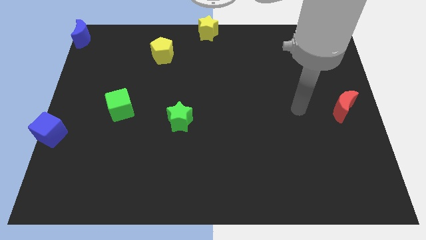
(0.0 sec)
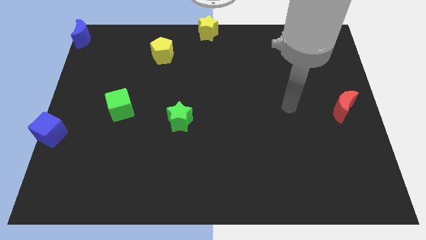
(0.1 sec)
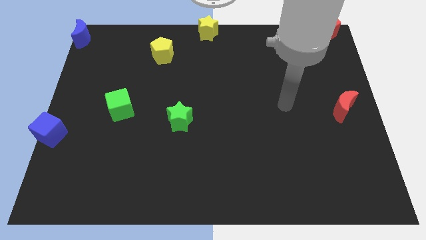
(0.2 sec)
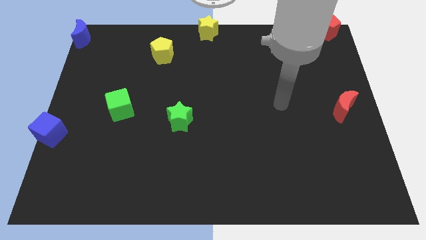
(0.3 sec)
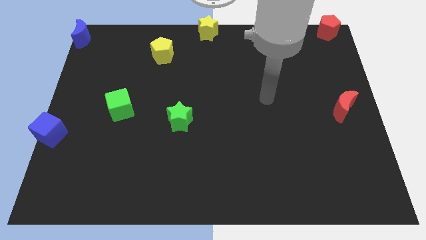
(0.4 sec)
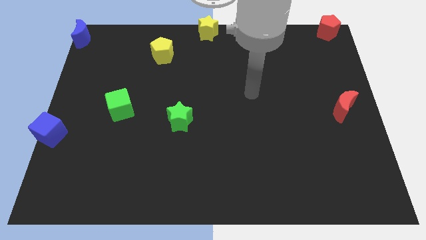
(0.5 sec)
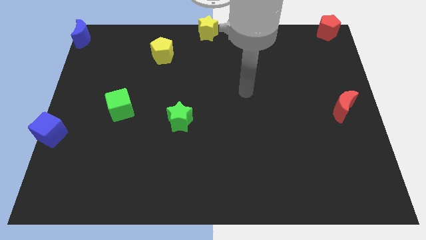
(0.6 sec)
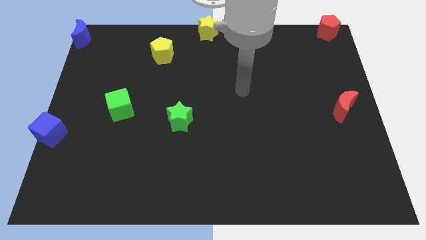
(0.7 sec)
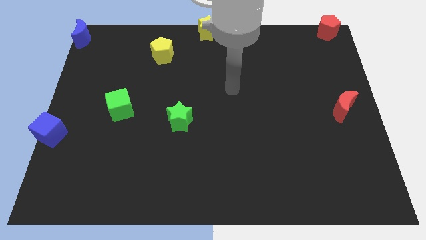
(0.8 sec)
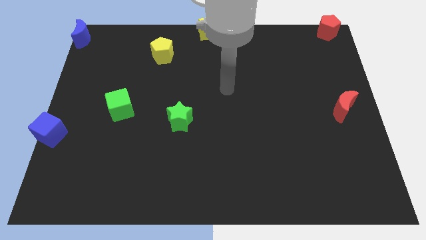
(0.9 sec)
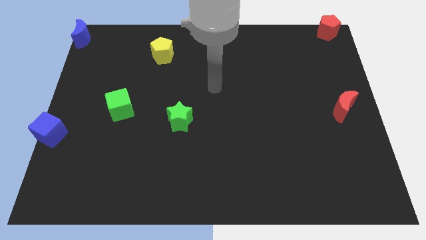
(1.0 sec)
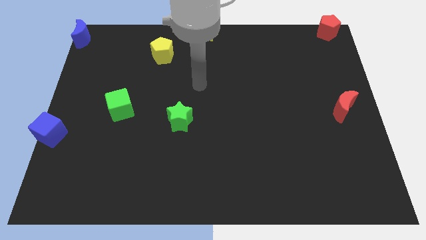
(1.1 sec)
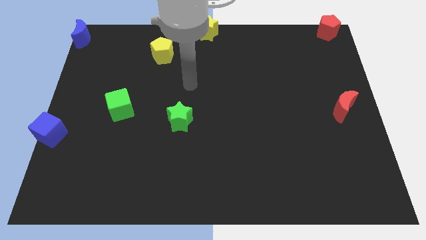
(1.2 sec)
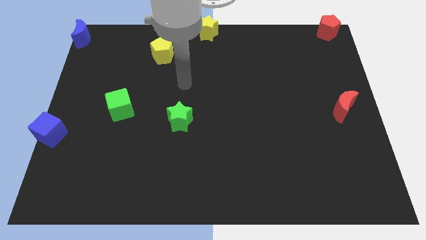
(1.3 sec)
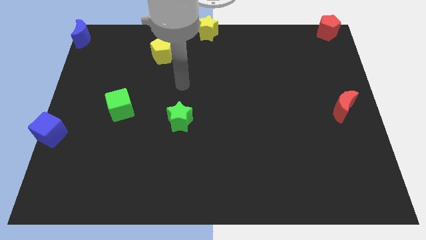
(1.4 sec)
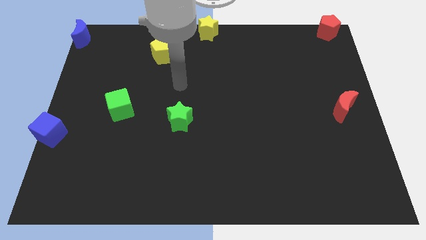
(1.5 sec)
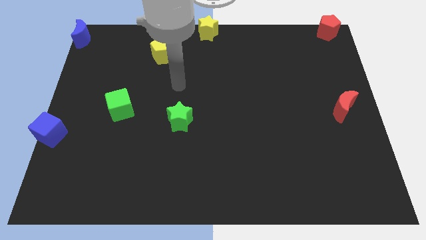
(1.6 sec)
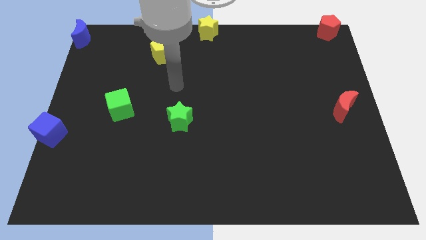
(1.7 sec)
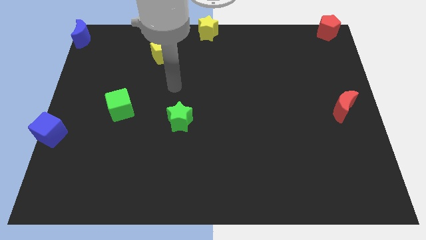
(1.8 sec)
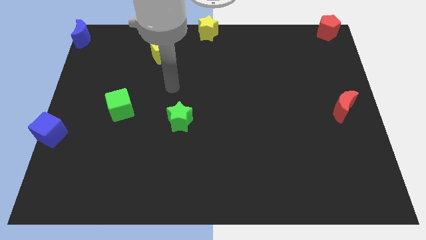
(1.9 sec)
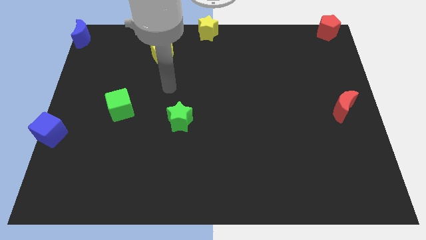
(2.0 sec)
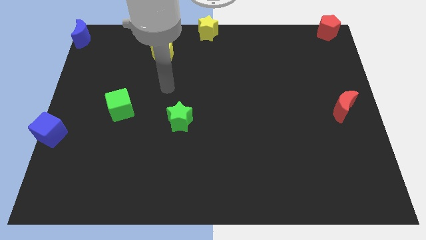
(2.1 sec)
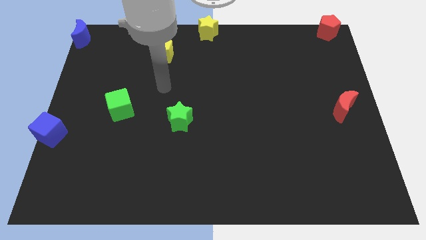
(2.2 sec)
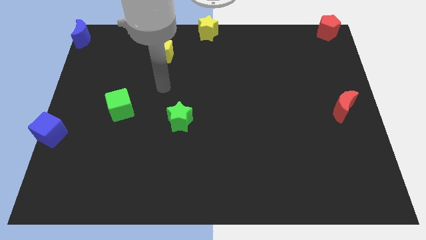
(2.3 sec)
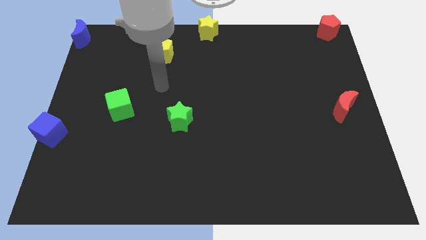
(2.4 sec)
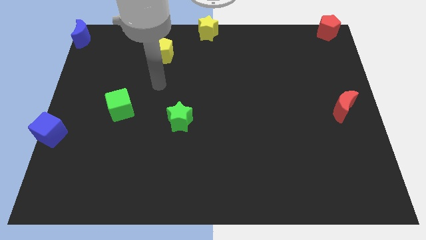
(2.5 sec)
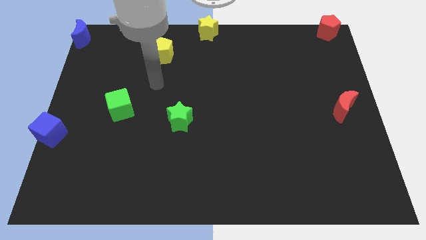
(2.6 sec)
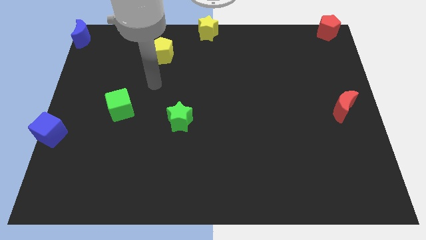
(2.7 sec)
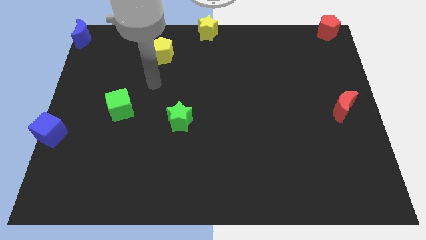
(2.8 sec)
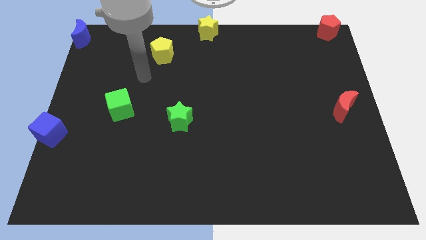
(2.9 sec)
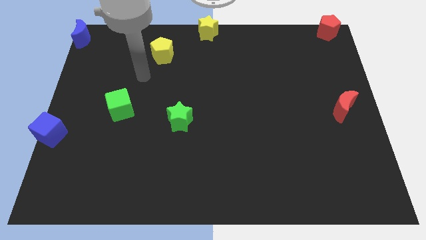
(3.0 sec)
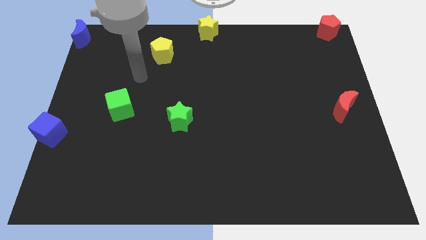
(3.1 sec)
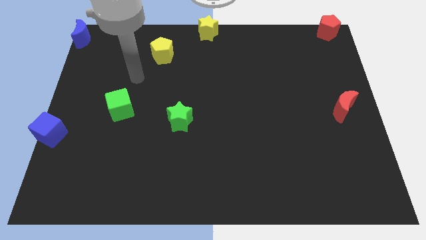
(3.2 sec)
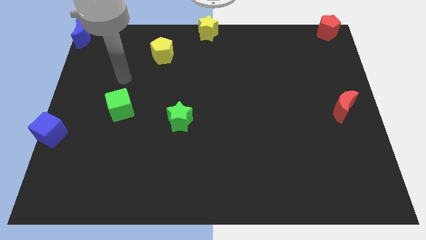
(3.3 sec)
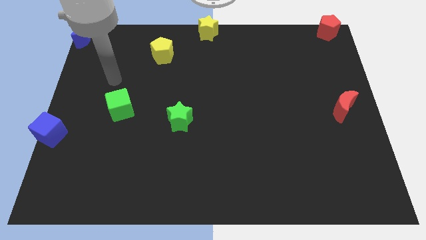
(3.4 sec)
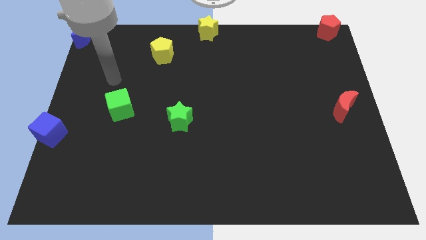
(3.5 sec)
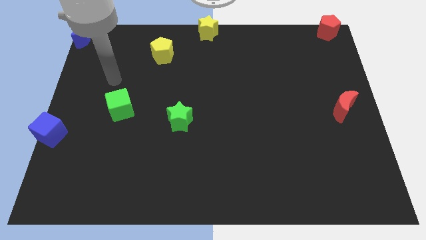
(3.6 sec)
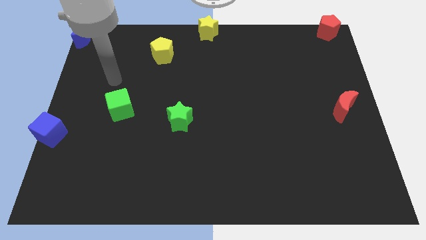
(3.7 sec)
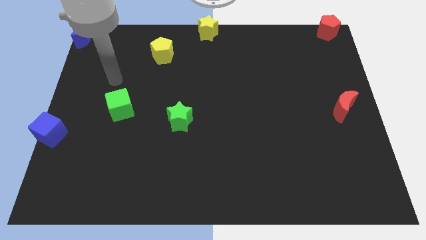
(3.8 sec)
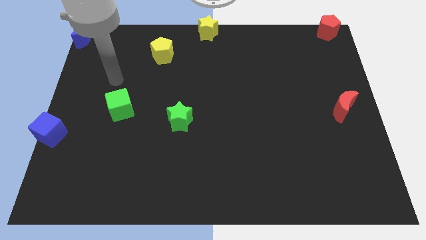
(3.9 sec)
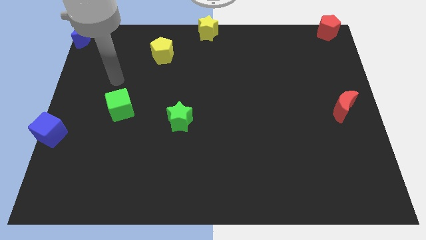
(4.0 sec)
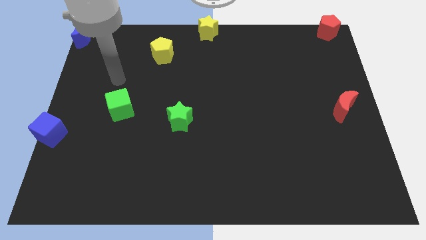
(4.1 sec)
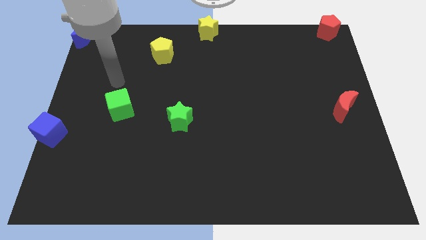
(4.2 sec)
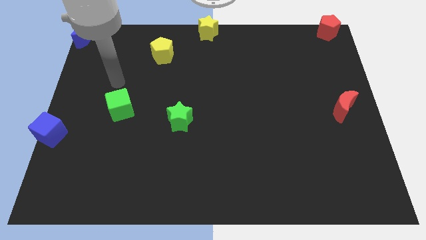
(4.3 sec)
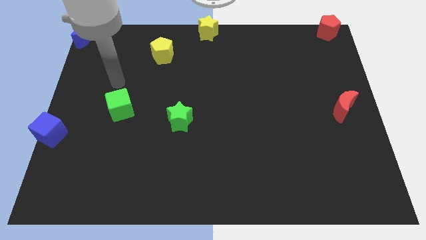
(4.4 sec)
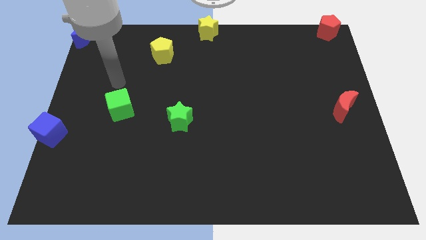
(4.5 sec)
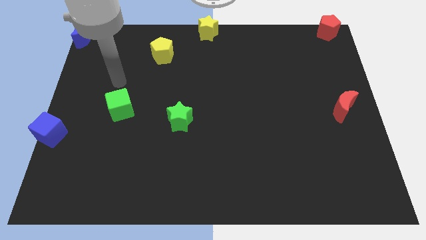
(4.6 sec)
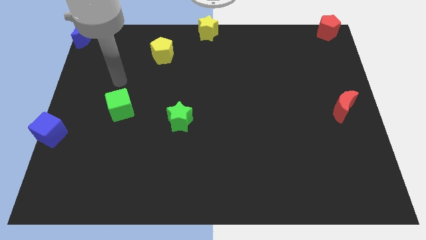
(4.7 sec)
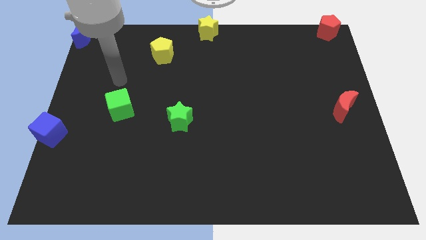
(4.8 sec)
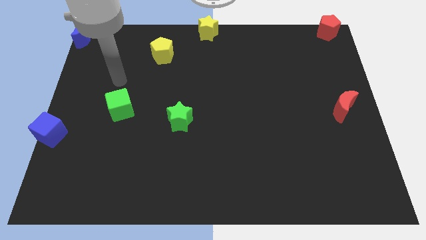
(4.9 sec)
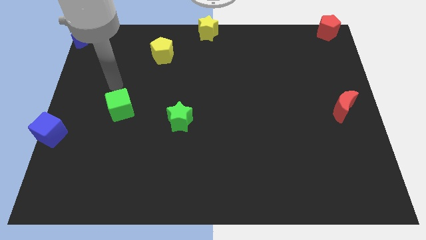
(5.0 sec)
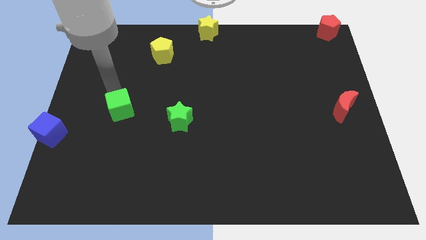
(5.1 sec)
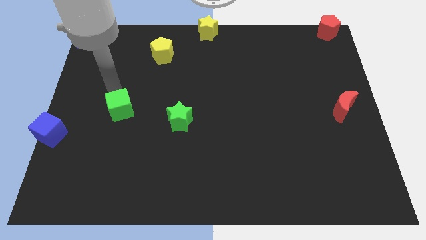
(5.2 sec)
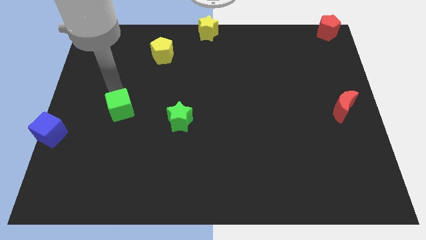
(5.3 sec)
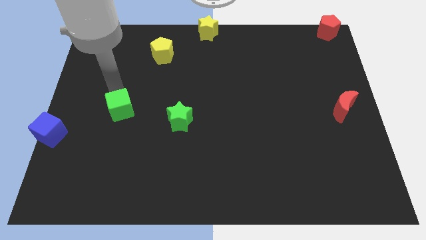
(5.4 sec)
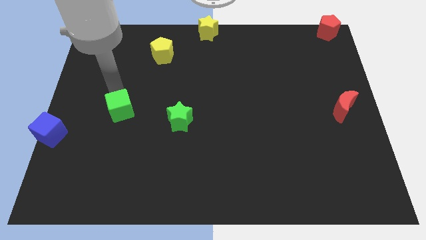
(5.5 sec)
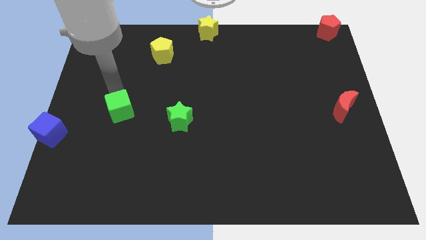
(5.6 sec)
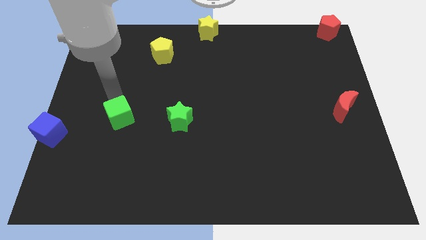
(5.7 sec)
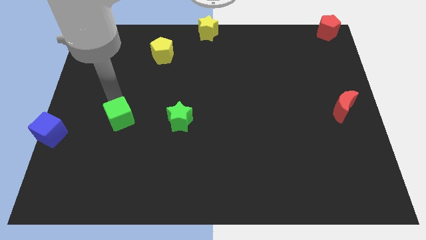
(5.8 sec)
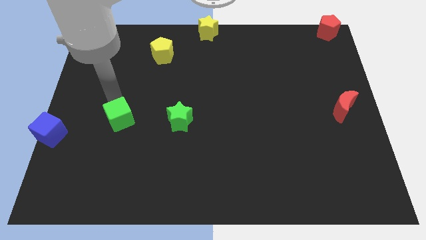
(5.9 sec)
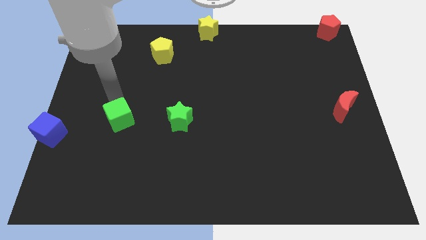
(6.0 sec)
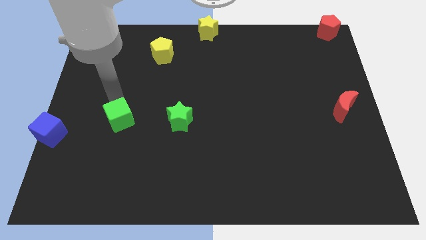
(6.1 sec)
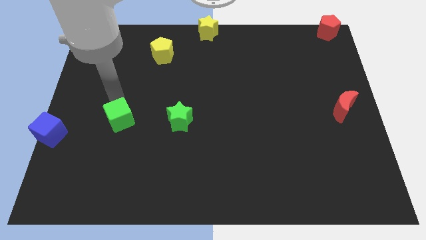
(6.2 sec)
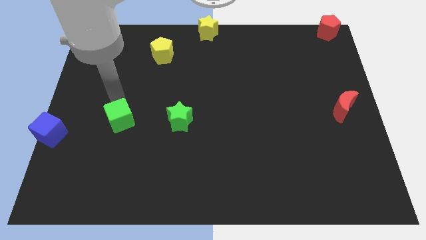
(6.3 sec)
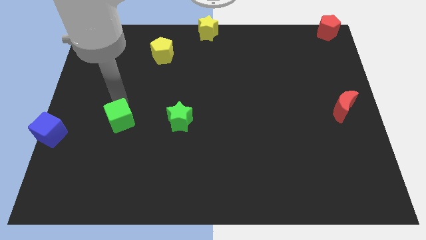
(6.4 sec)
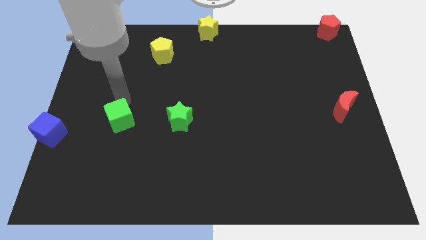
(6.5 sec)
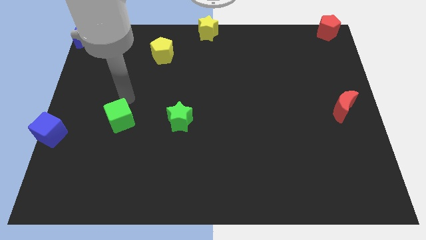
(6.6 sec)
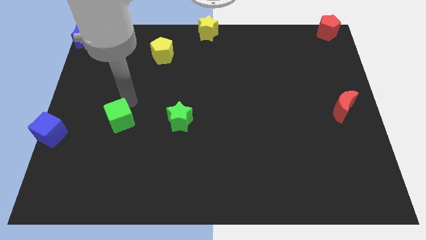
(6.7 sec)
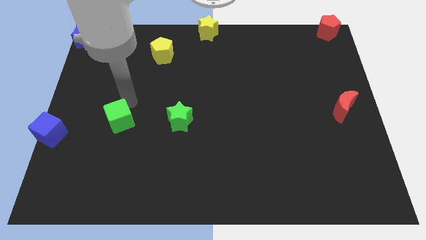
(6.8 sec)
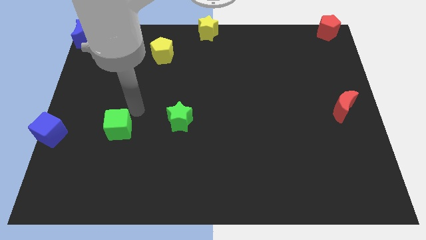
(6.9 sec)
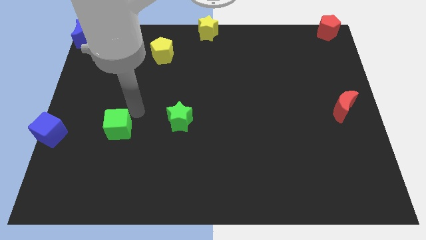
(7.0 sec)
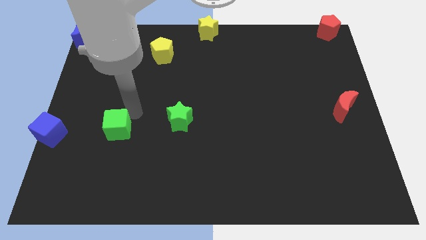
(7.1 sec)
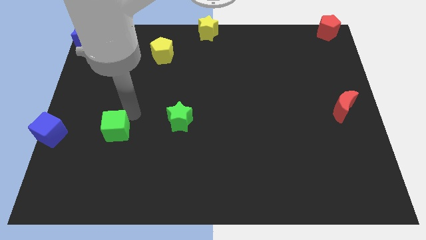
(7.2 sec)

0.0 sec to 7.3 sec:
place the green cube to the right of the blue cube

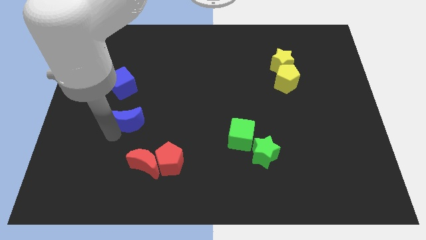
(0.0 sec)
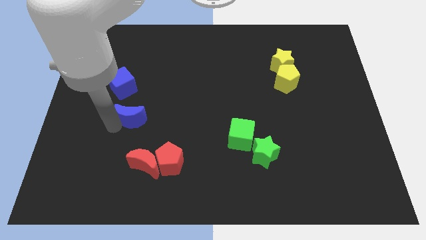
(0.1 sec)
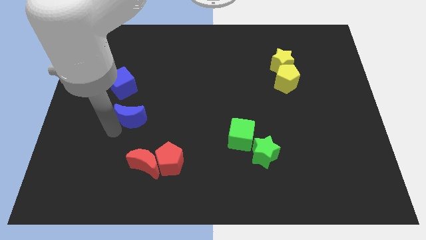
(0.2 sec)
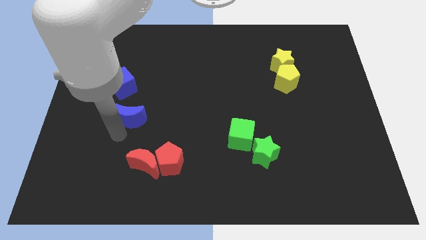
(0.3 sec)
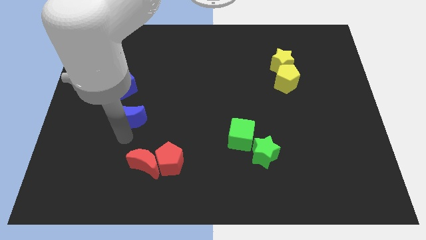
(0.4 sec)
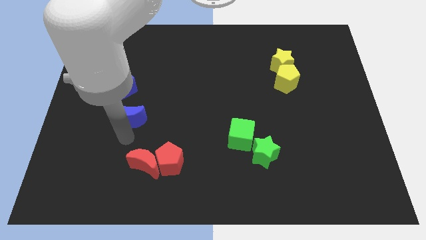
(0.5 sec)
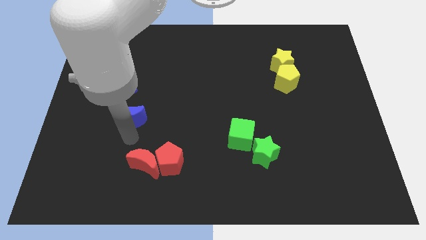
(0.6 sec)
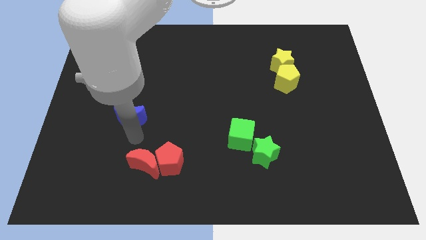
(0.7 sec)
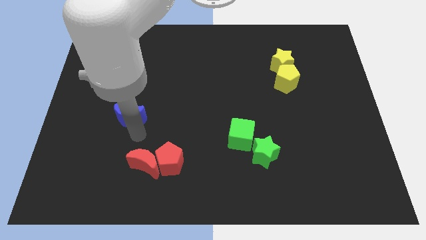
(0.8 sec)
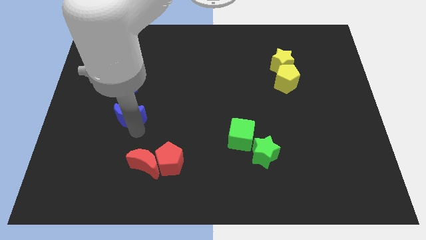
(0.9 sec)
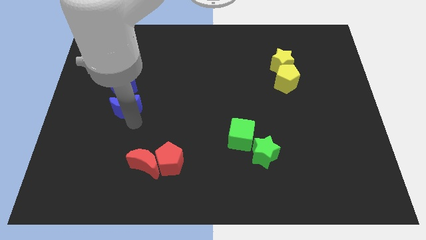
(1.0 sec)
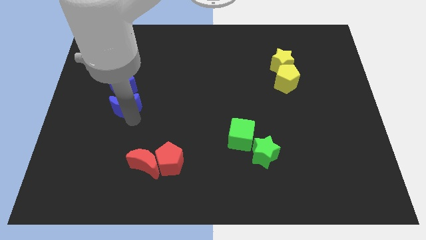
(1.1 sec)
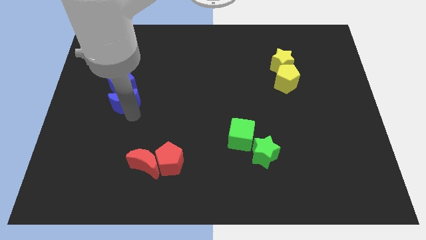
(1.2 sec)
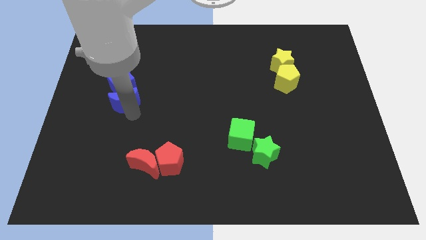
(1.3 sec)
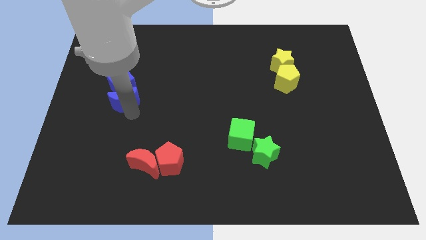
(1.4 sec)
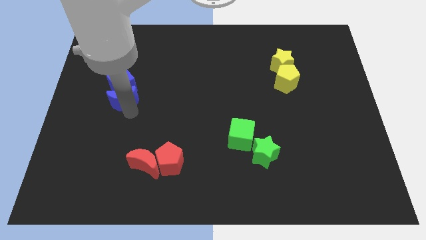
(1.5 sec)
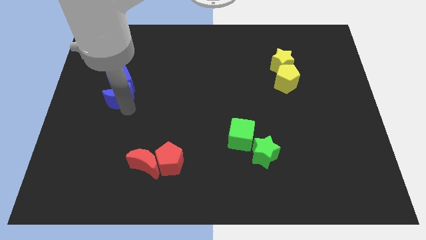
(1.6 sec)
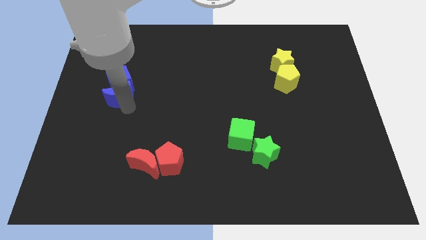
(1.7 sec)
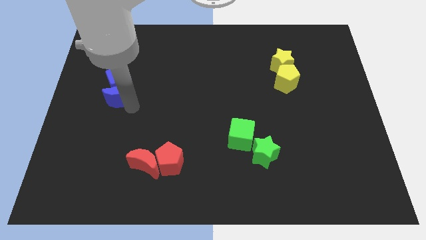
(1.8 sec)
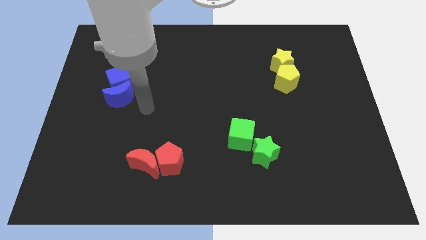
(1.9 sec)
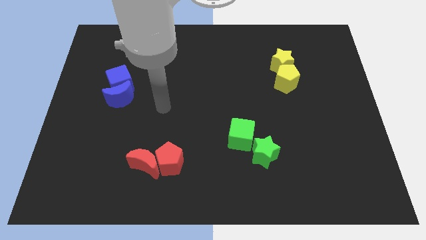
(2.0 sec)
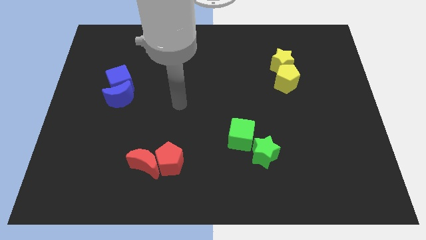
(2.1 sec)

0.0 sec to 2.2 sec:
place blue crescent into blue cube
